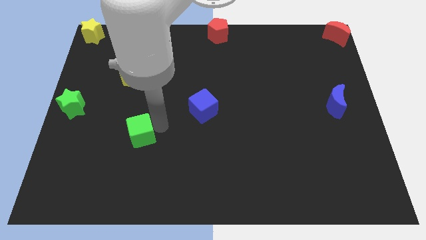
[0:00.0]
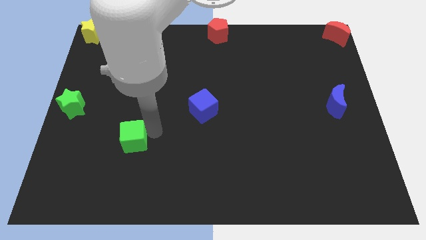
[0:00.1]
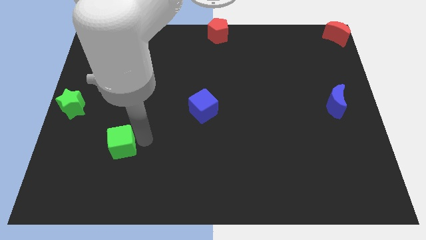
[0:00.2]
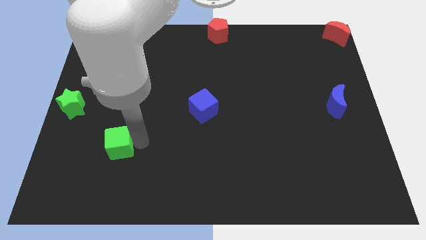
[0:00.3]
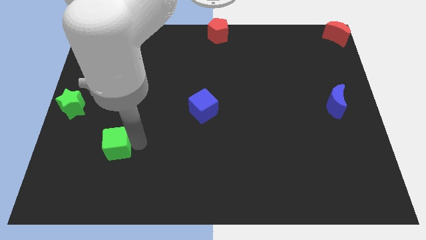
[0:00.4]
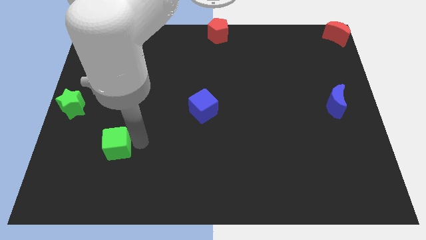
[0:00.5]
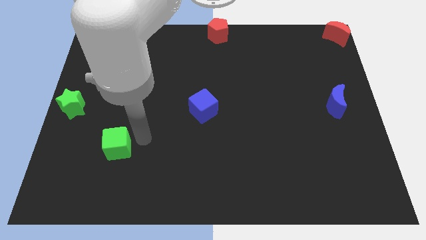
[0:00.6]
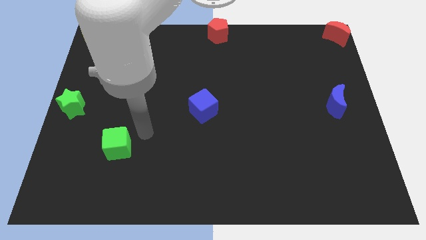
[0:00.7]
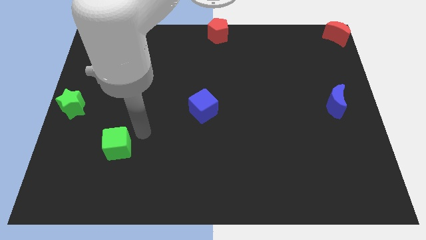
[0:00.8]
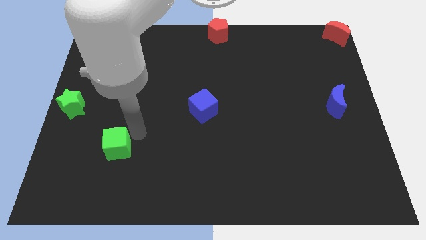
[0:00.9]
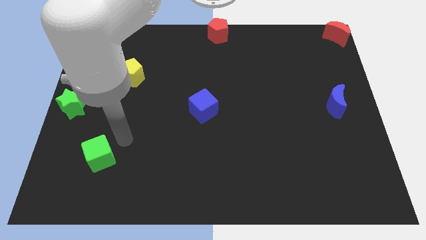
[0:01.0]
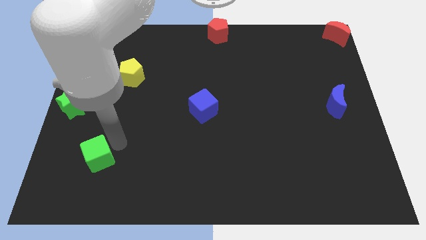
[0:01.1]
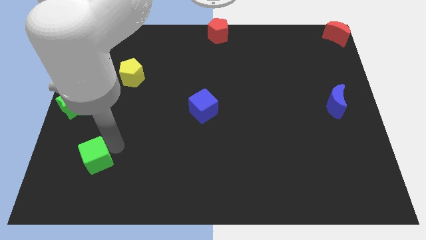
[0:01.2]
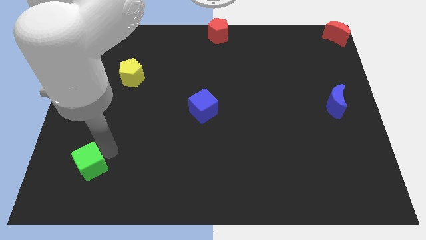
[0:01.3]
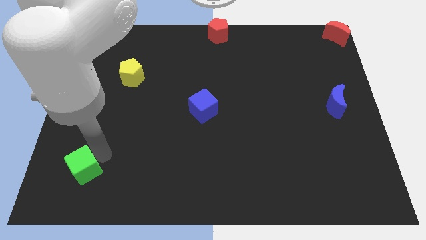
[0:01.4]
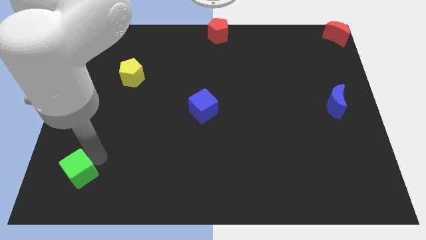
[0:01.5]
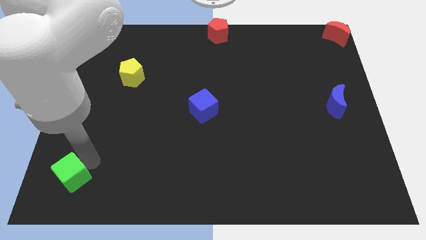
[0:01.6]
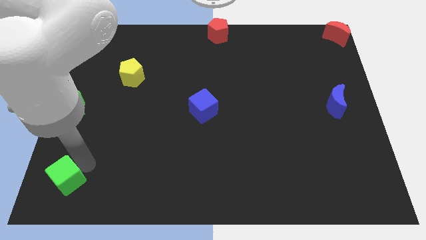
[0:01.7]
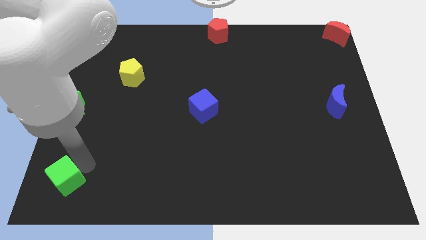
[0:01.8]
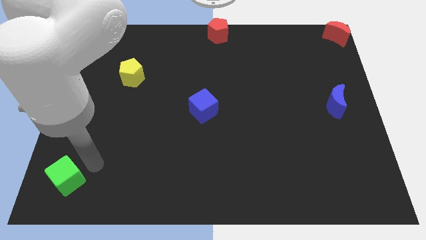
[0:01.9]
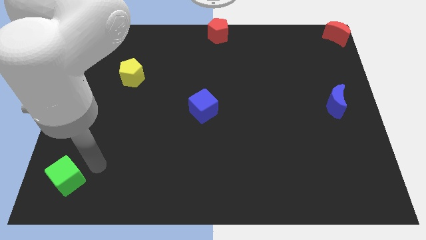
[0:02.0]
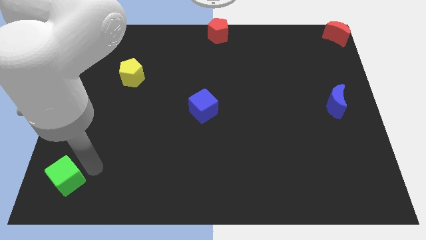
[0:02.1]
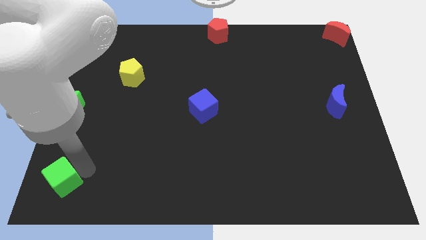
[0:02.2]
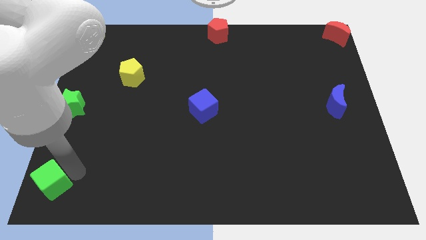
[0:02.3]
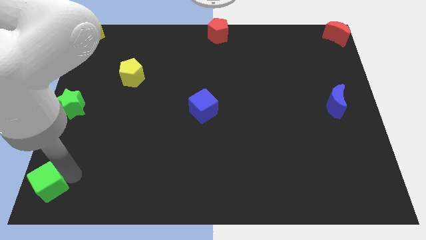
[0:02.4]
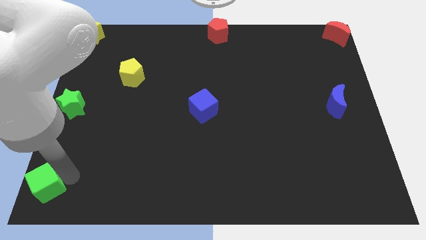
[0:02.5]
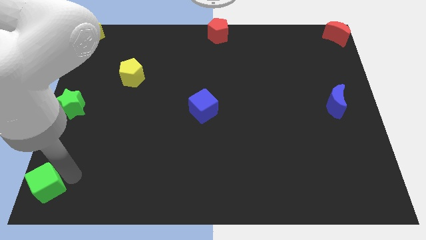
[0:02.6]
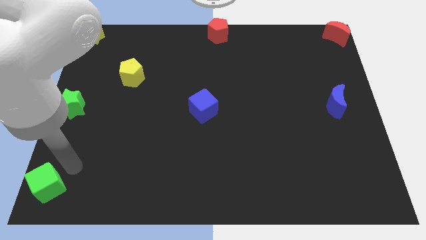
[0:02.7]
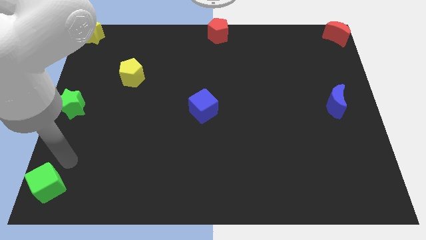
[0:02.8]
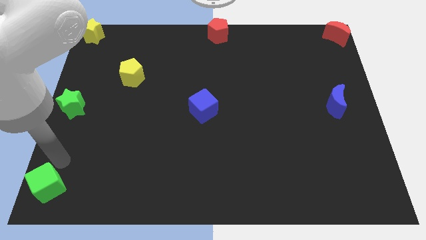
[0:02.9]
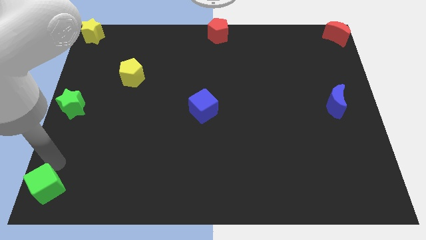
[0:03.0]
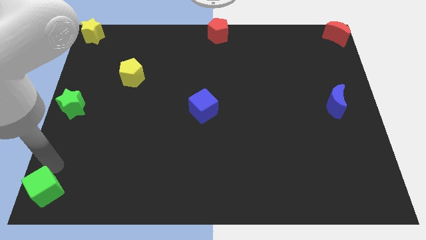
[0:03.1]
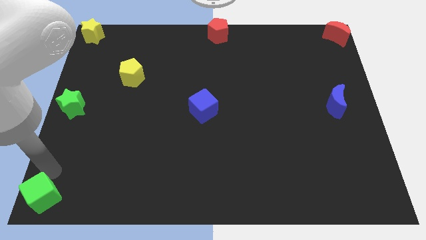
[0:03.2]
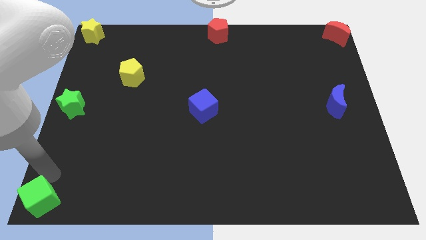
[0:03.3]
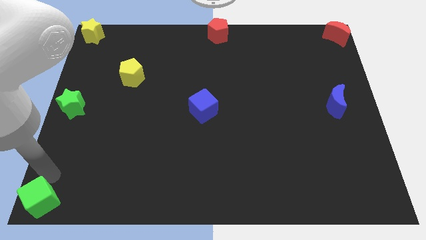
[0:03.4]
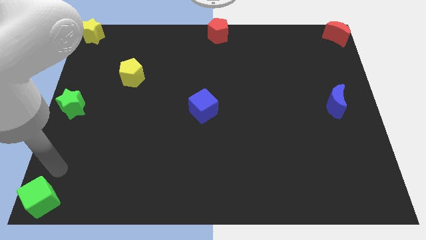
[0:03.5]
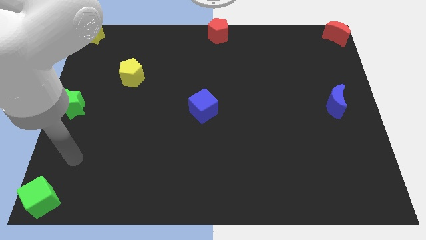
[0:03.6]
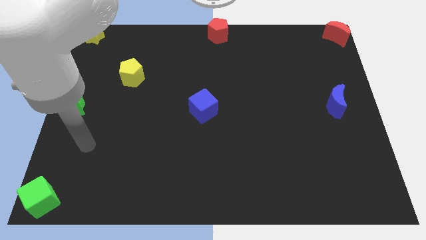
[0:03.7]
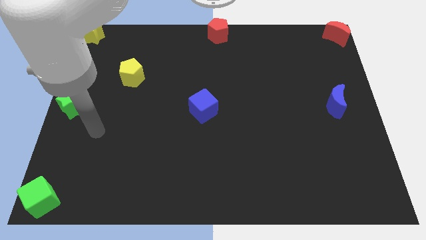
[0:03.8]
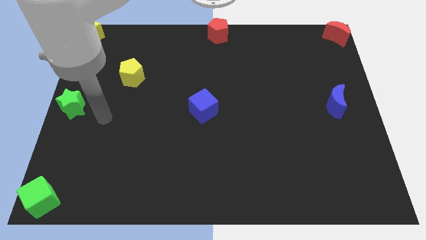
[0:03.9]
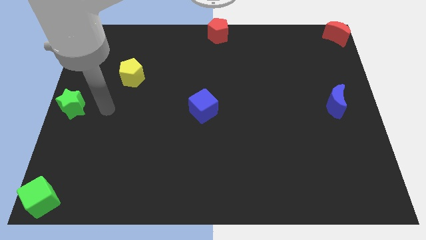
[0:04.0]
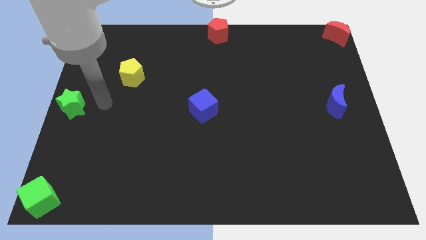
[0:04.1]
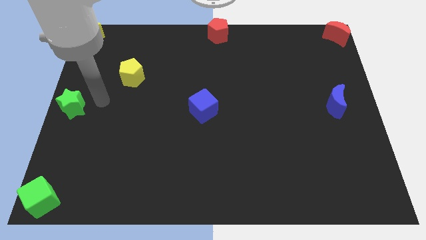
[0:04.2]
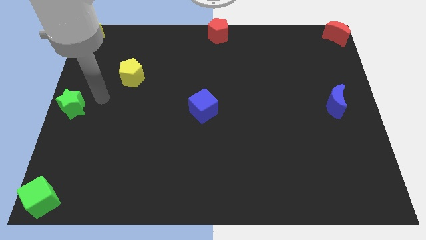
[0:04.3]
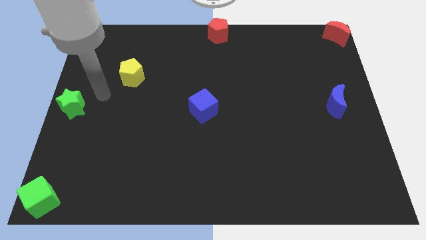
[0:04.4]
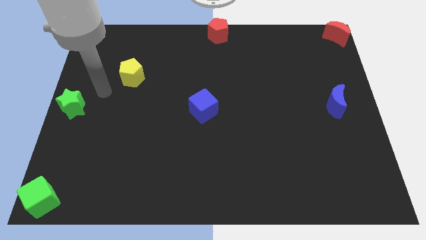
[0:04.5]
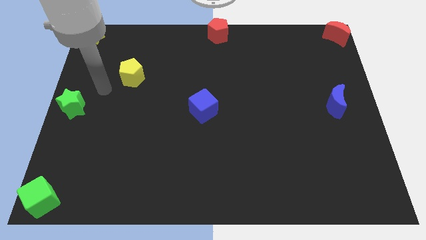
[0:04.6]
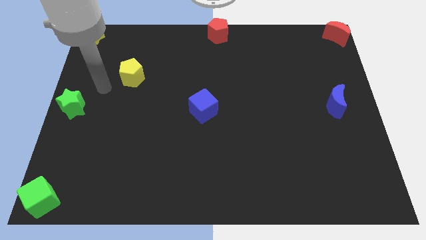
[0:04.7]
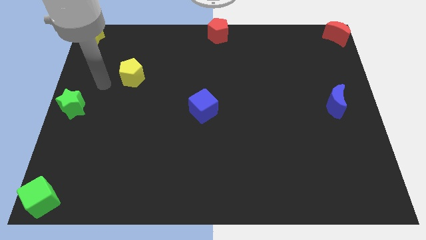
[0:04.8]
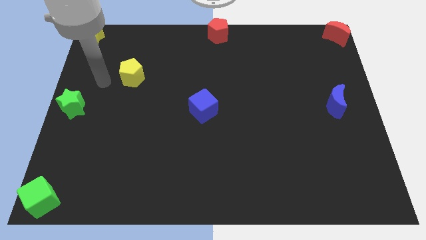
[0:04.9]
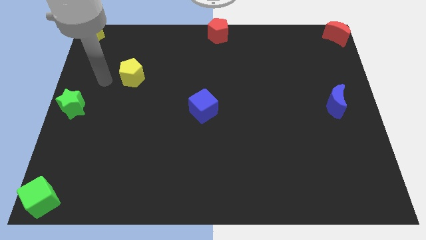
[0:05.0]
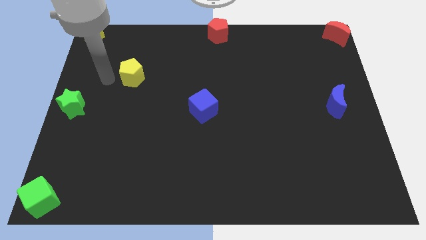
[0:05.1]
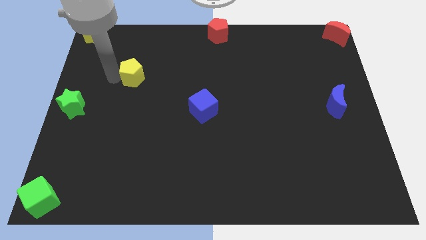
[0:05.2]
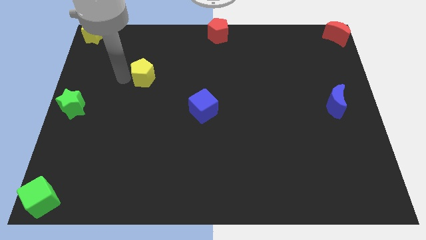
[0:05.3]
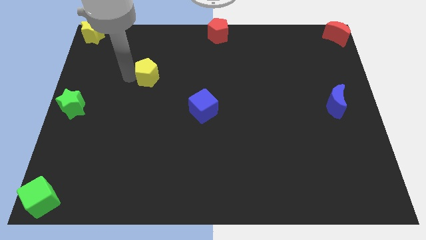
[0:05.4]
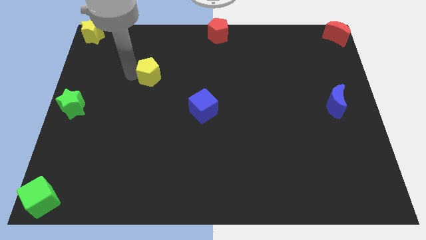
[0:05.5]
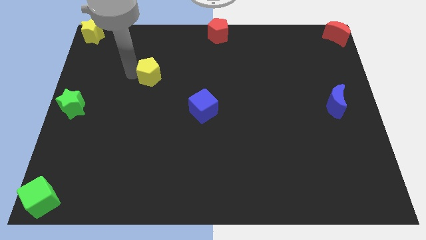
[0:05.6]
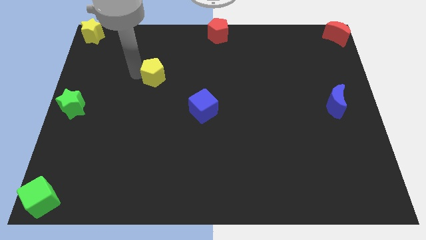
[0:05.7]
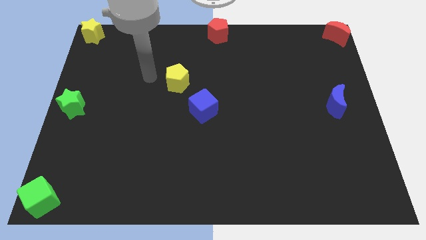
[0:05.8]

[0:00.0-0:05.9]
push the green cube towards the bottom left corner of the board

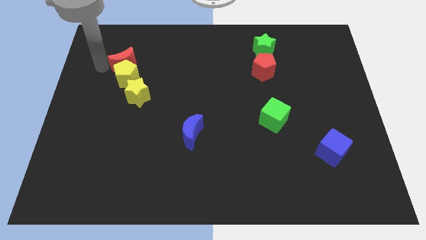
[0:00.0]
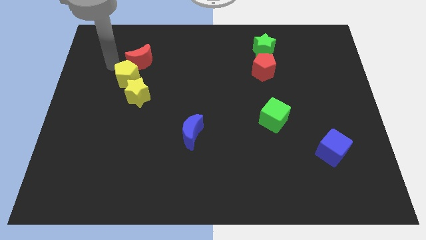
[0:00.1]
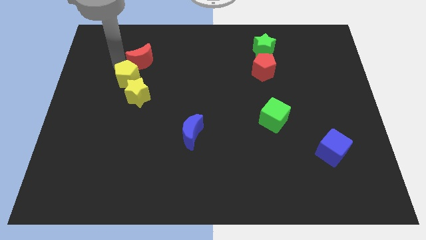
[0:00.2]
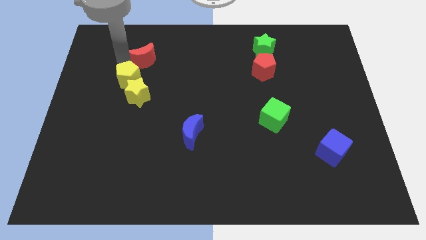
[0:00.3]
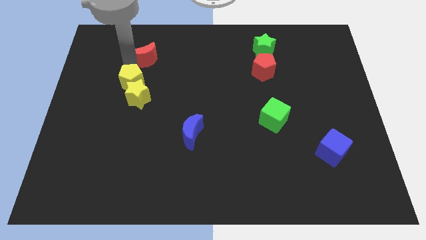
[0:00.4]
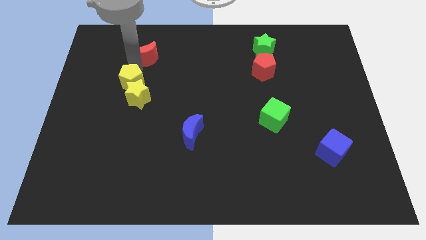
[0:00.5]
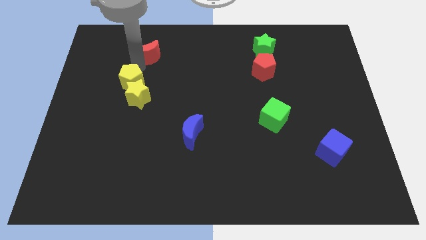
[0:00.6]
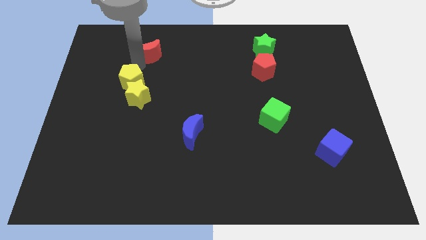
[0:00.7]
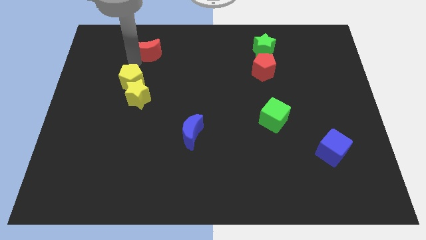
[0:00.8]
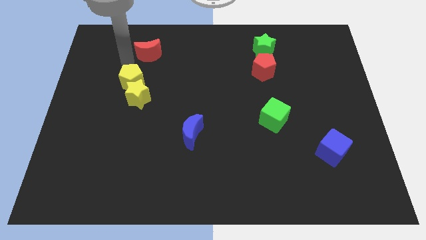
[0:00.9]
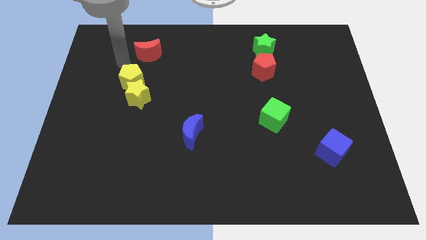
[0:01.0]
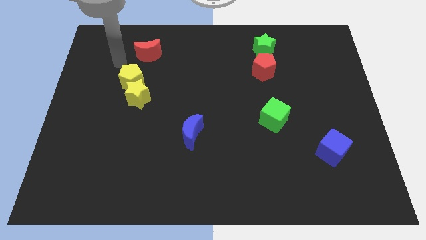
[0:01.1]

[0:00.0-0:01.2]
separate the red crescent from the yellow blocks

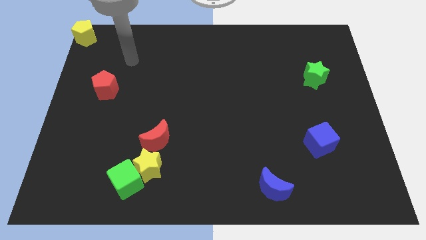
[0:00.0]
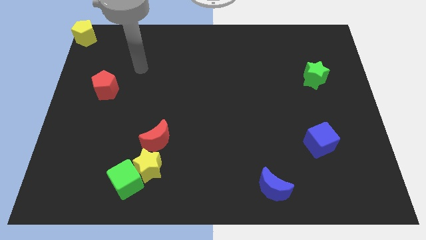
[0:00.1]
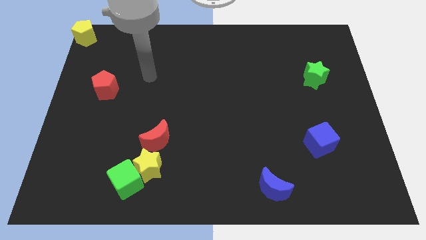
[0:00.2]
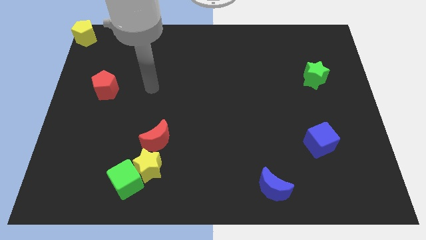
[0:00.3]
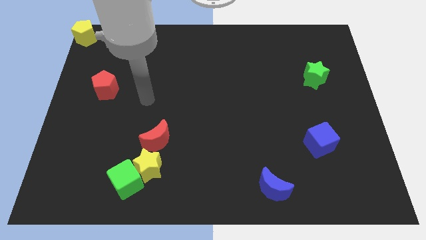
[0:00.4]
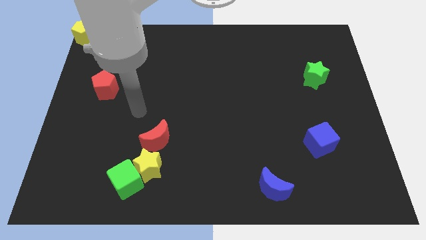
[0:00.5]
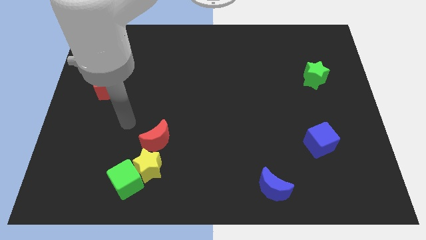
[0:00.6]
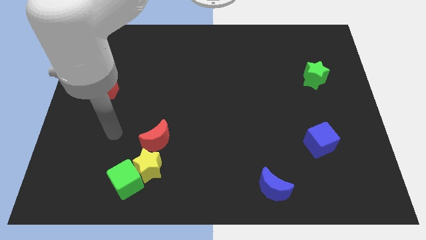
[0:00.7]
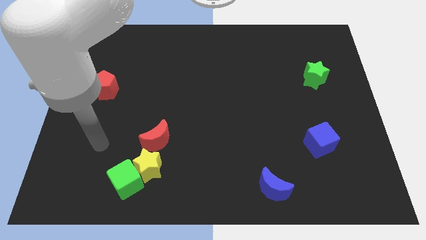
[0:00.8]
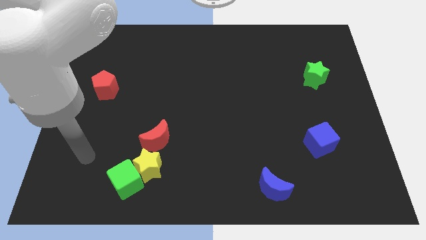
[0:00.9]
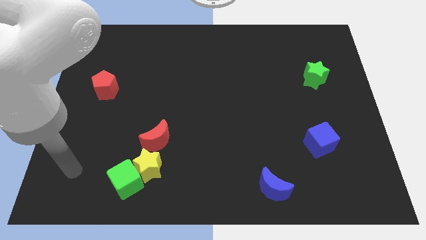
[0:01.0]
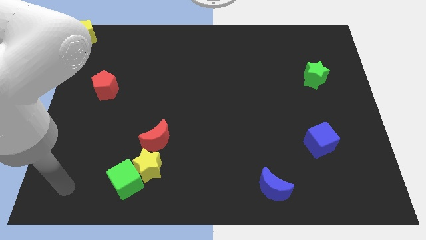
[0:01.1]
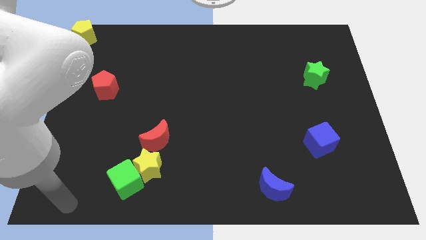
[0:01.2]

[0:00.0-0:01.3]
move your arm to the bottom left

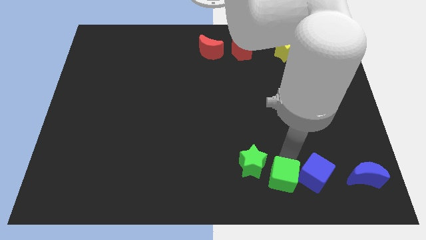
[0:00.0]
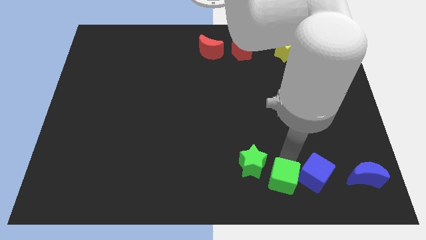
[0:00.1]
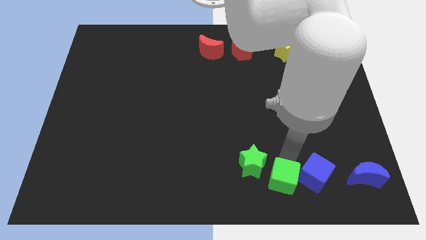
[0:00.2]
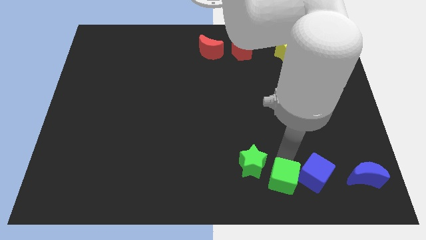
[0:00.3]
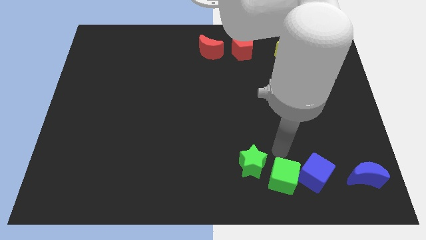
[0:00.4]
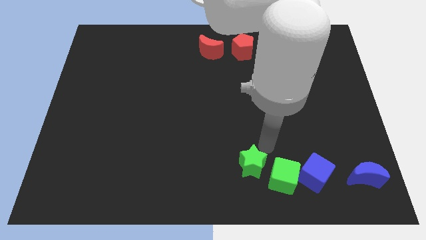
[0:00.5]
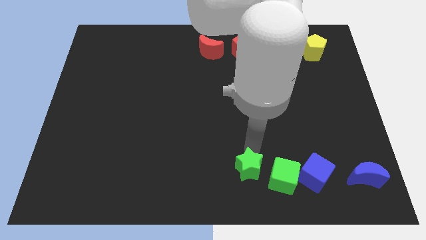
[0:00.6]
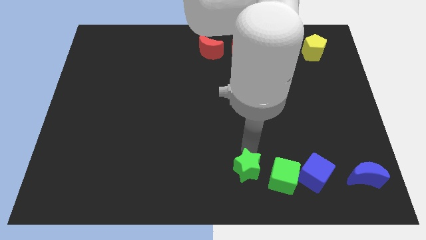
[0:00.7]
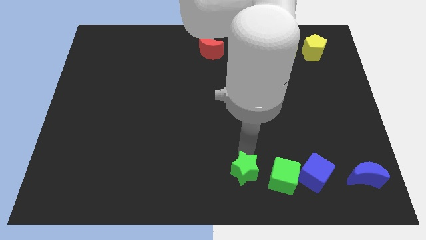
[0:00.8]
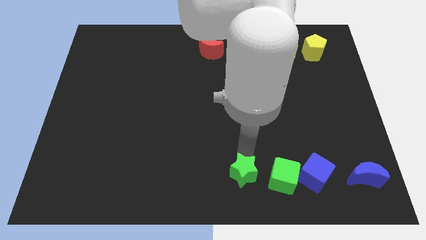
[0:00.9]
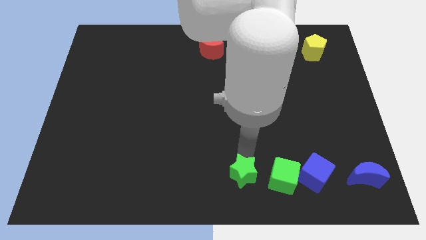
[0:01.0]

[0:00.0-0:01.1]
point your arm above green star
